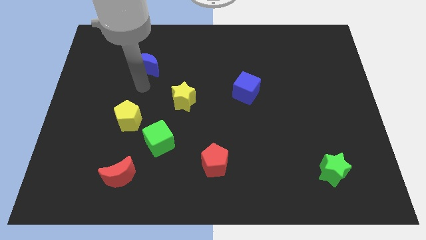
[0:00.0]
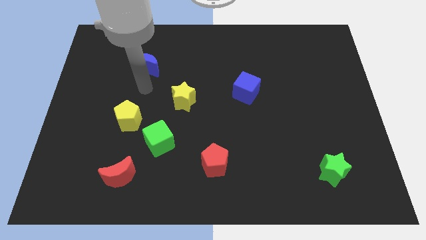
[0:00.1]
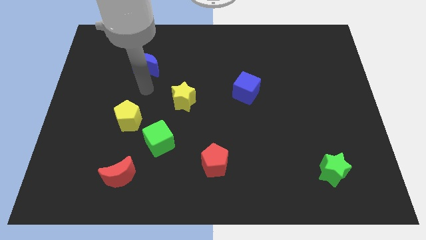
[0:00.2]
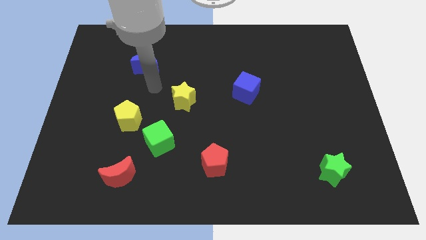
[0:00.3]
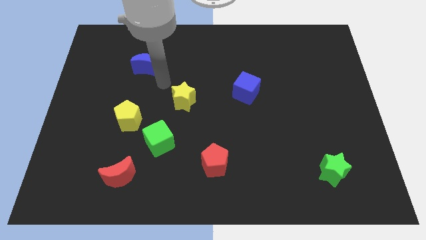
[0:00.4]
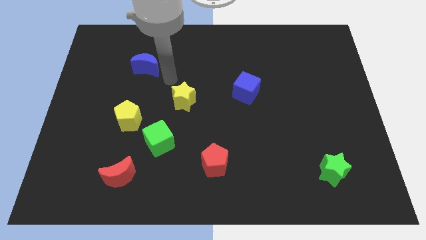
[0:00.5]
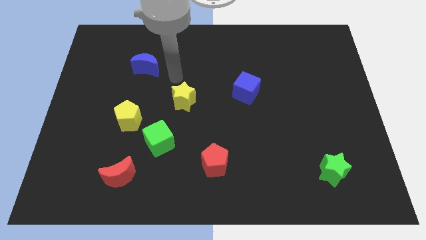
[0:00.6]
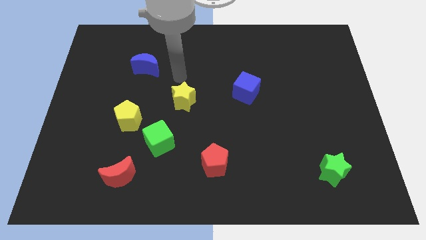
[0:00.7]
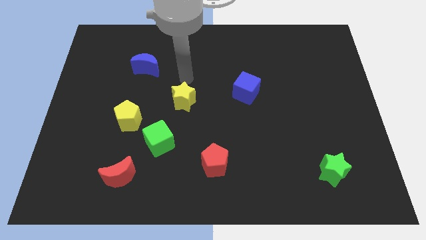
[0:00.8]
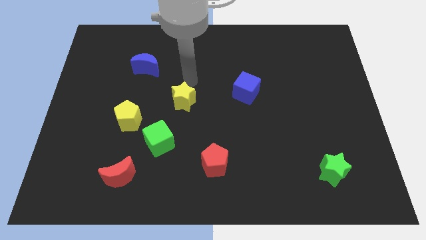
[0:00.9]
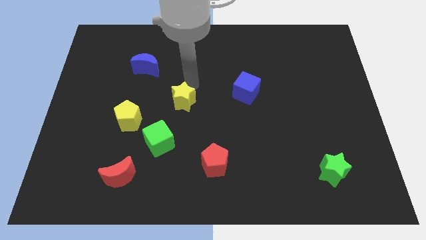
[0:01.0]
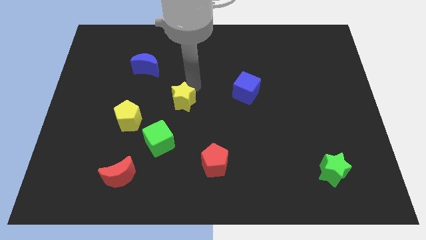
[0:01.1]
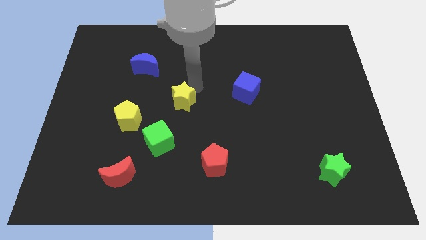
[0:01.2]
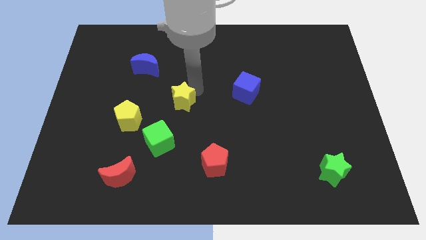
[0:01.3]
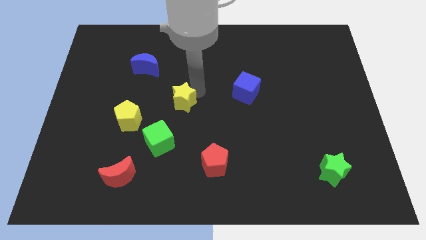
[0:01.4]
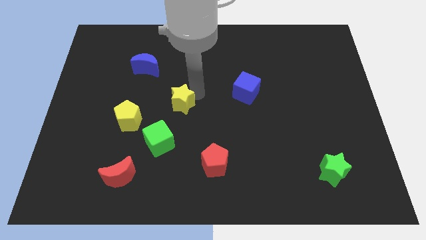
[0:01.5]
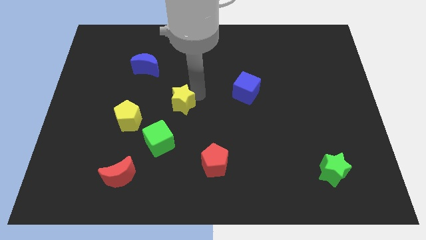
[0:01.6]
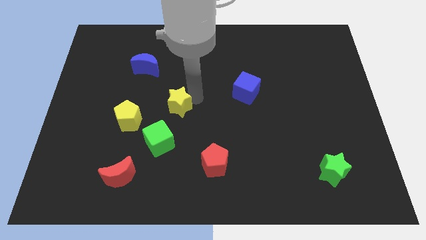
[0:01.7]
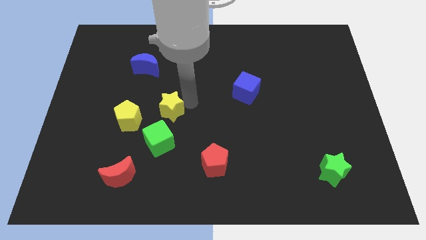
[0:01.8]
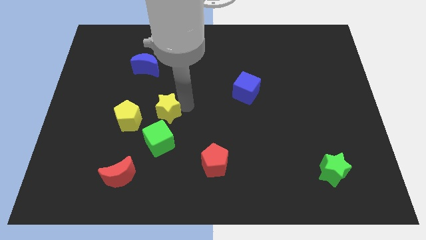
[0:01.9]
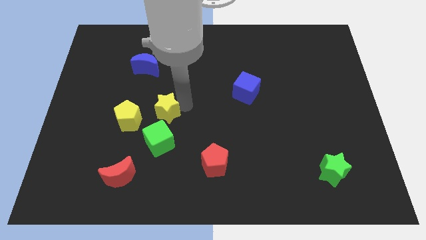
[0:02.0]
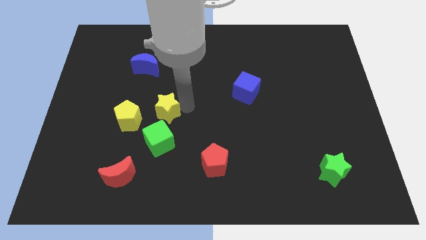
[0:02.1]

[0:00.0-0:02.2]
move the yellow star close to the green cube

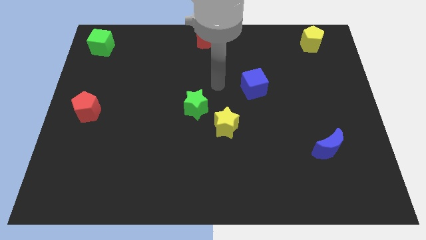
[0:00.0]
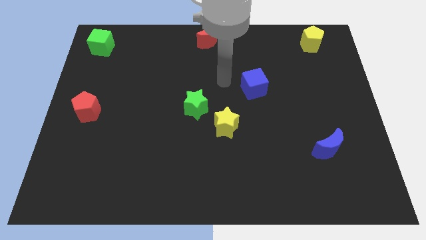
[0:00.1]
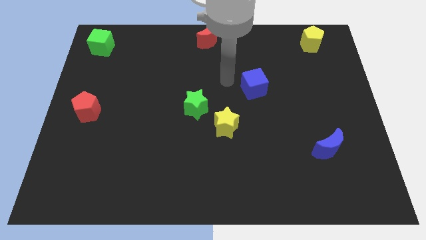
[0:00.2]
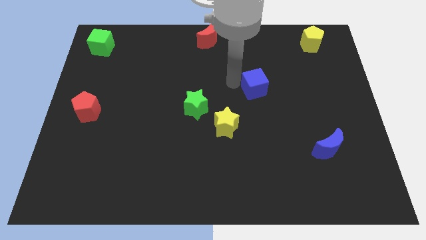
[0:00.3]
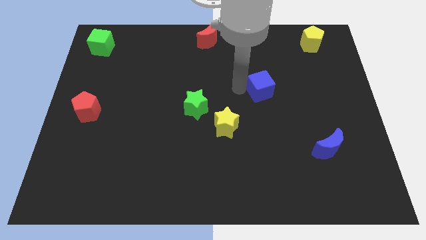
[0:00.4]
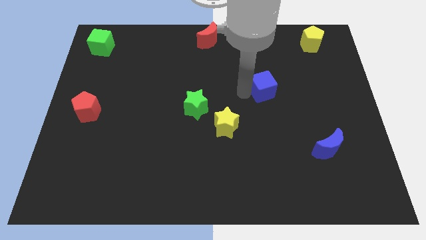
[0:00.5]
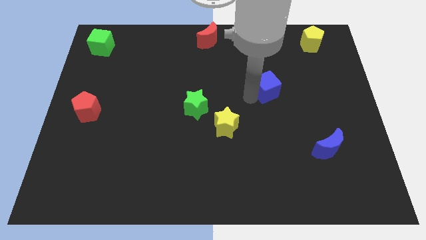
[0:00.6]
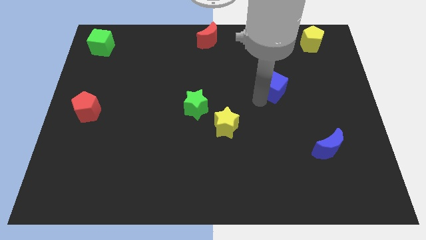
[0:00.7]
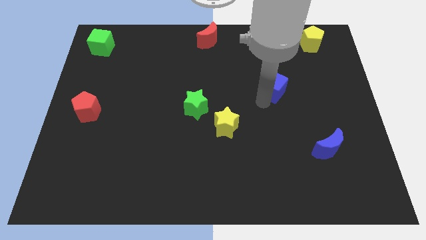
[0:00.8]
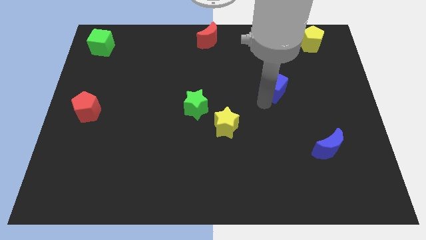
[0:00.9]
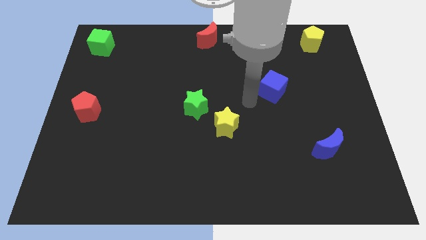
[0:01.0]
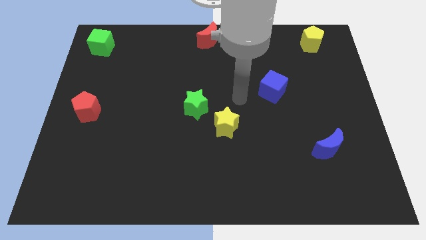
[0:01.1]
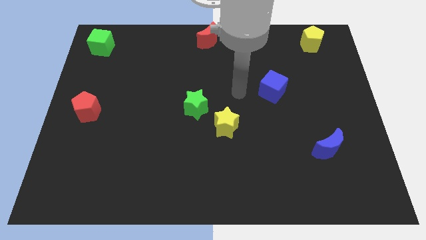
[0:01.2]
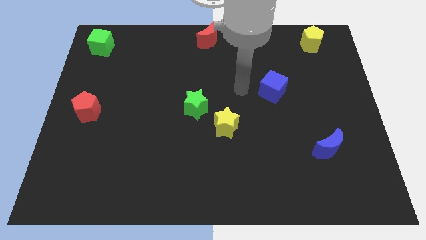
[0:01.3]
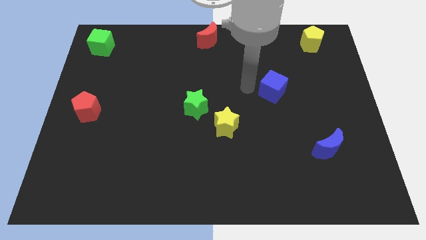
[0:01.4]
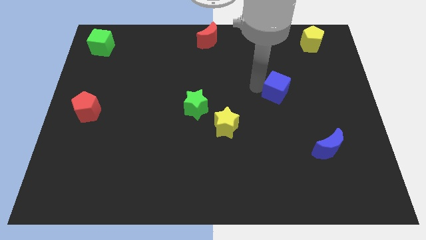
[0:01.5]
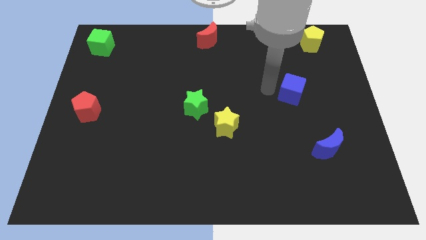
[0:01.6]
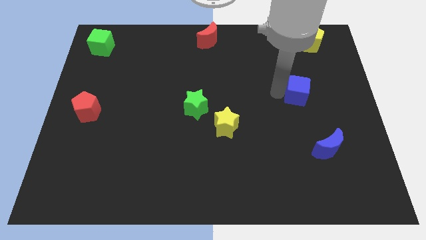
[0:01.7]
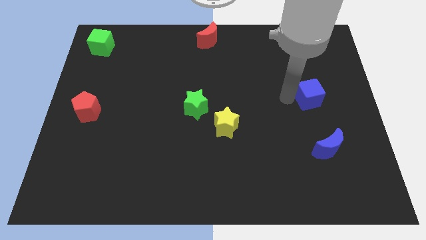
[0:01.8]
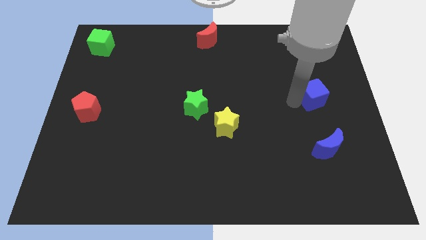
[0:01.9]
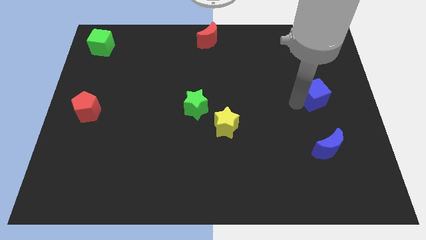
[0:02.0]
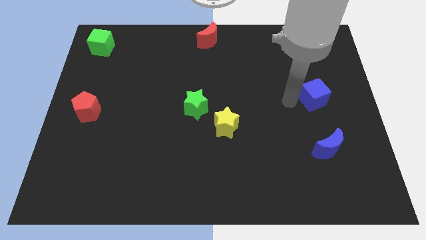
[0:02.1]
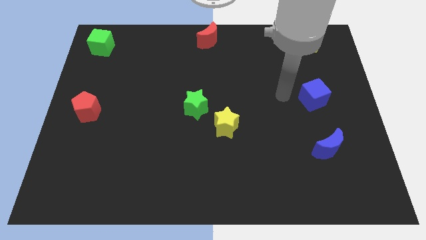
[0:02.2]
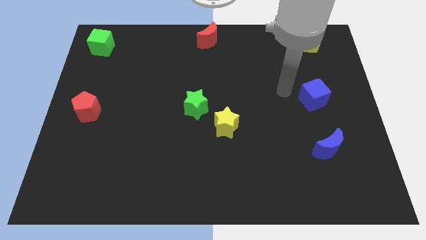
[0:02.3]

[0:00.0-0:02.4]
place the blue cube vertically above the blue moon

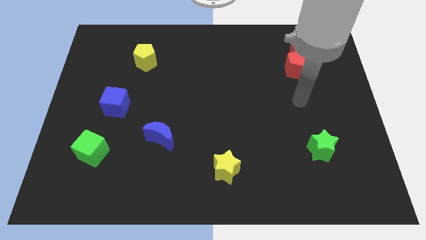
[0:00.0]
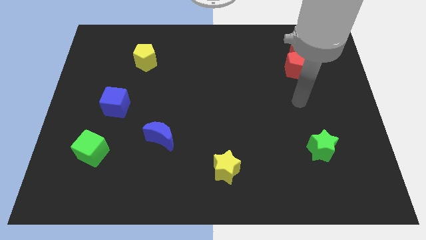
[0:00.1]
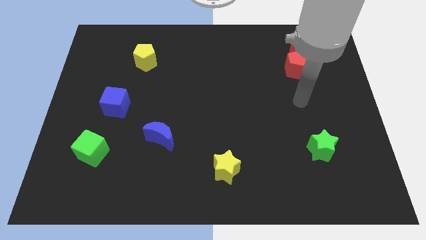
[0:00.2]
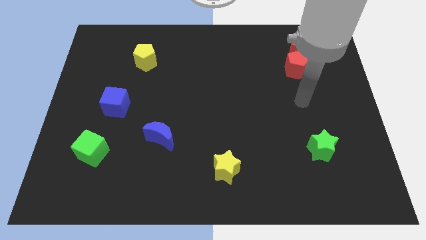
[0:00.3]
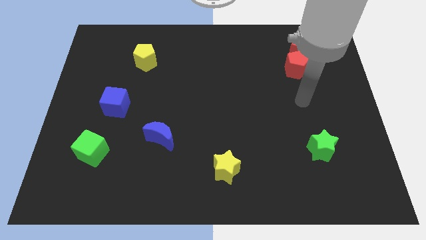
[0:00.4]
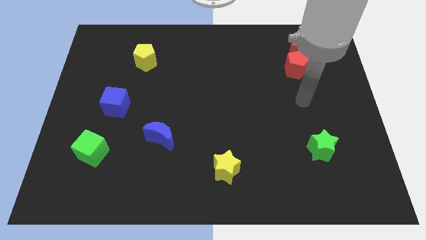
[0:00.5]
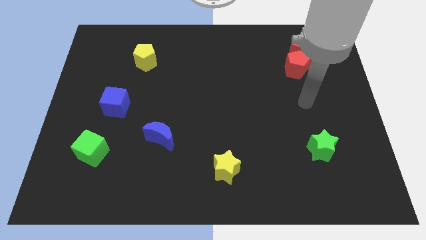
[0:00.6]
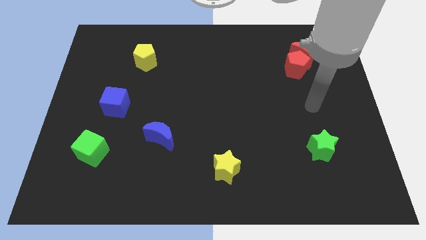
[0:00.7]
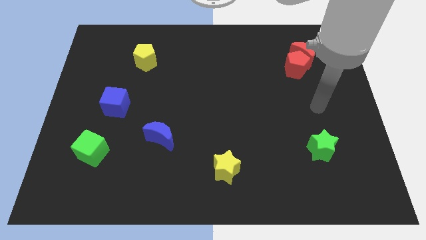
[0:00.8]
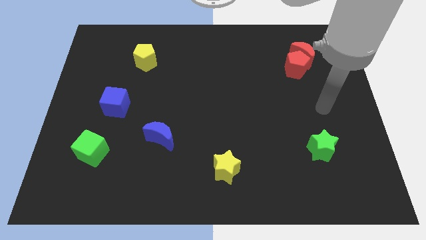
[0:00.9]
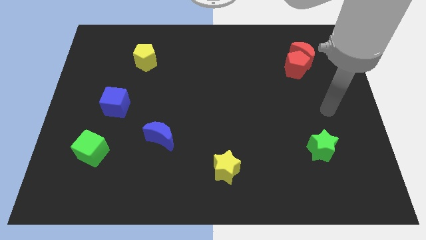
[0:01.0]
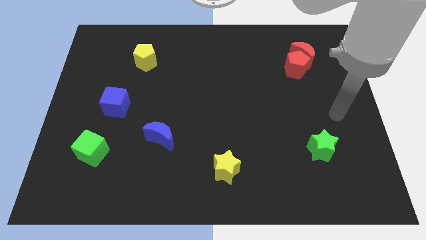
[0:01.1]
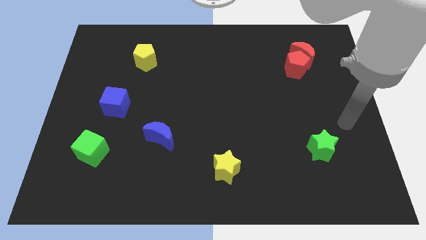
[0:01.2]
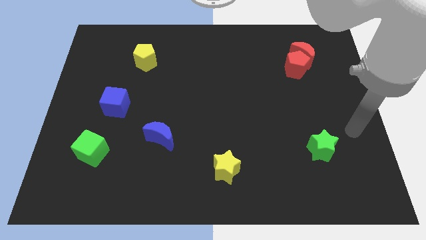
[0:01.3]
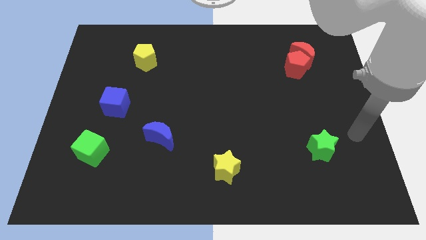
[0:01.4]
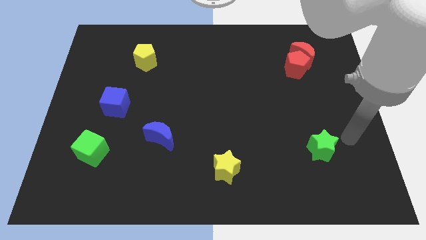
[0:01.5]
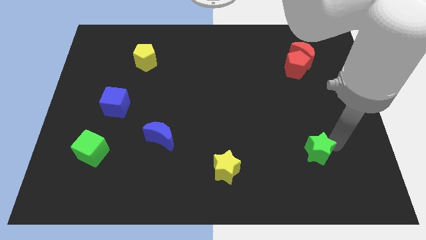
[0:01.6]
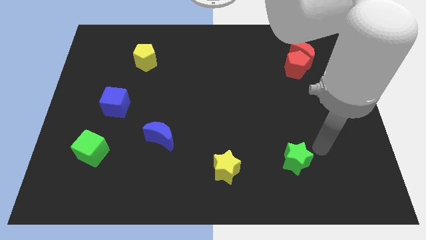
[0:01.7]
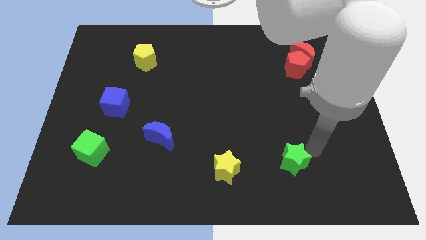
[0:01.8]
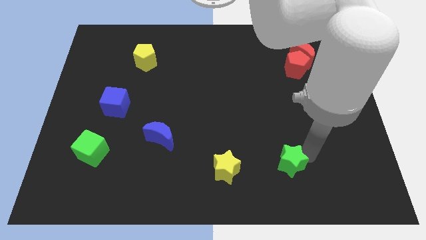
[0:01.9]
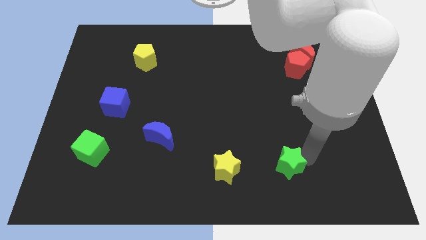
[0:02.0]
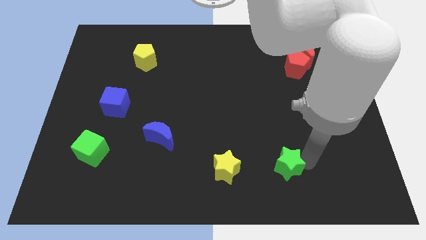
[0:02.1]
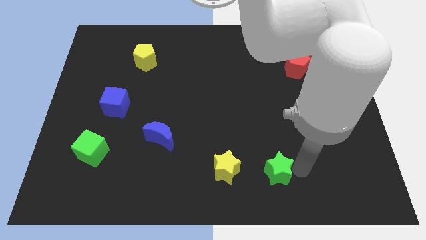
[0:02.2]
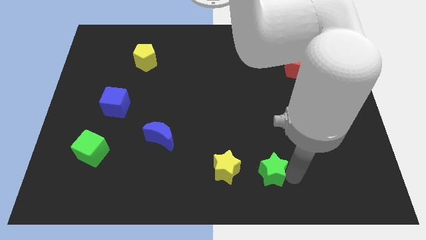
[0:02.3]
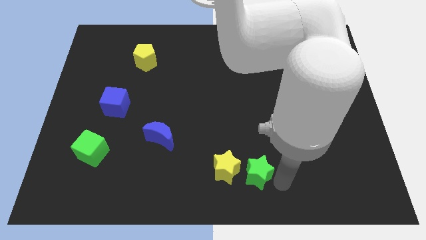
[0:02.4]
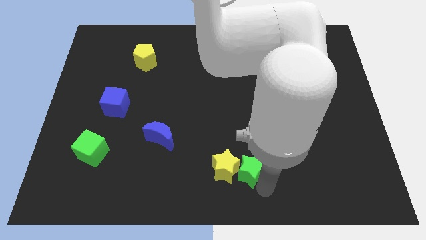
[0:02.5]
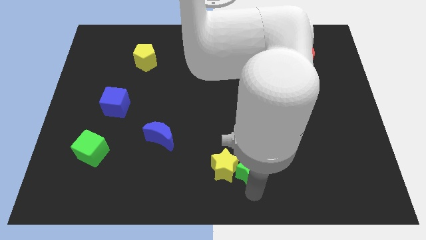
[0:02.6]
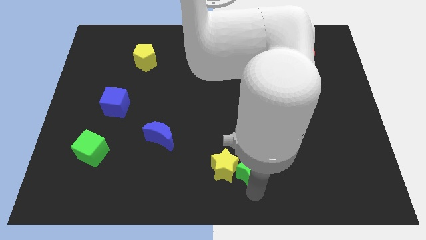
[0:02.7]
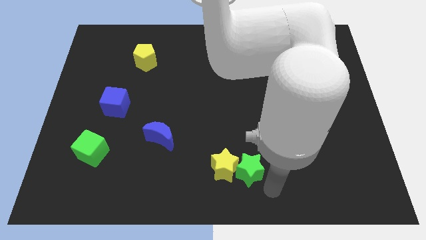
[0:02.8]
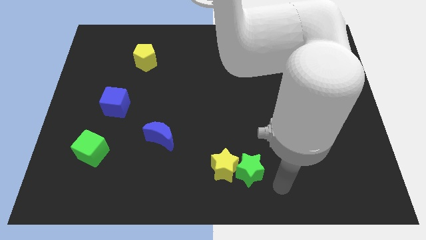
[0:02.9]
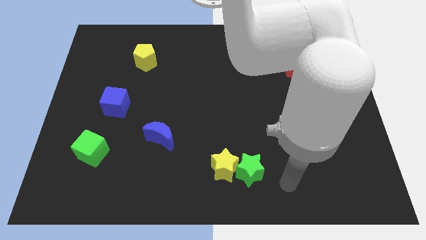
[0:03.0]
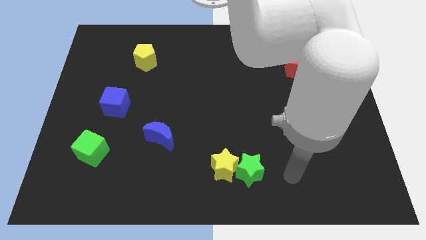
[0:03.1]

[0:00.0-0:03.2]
push green star into yellow star

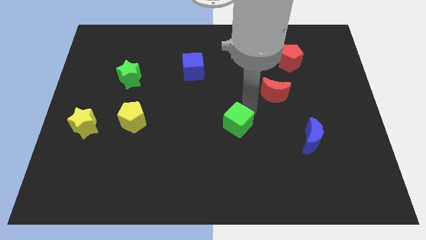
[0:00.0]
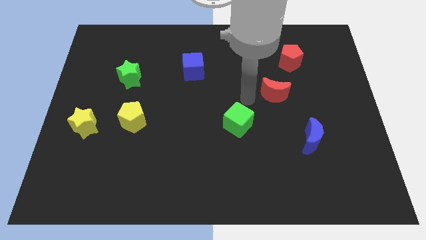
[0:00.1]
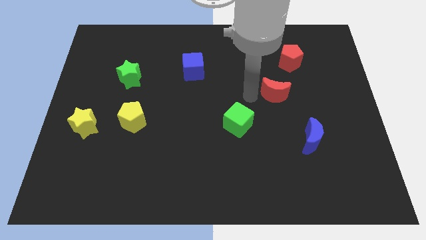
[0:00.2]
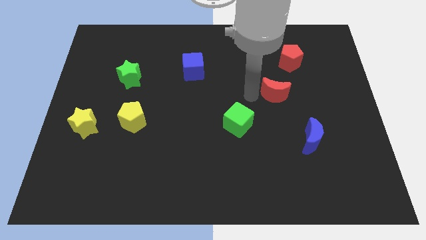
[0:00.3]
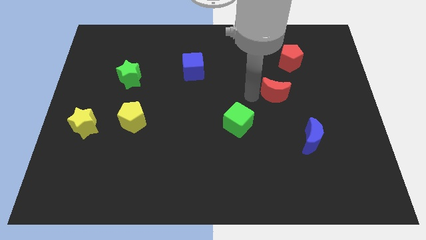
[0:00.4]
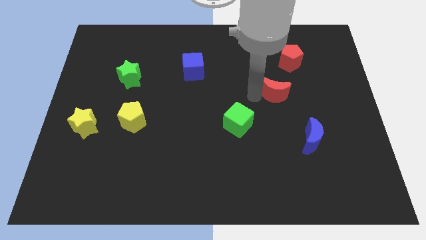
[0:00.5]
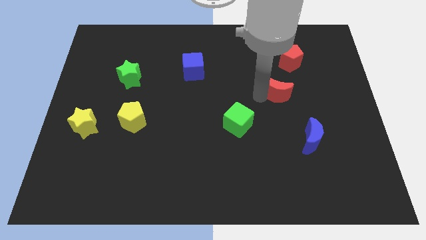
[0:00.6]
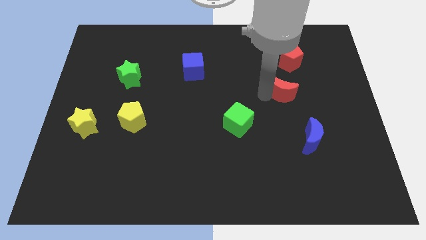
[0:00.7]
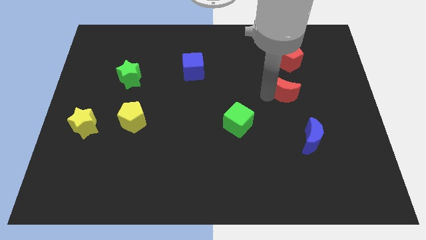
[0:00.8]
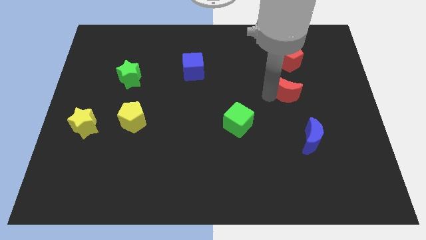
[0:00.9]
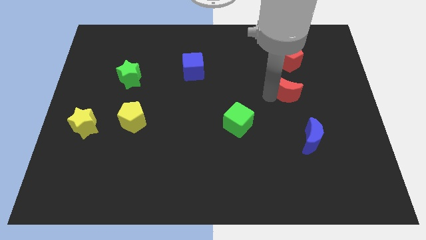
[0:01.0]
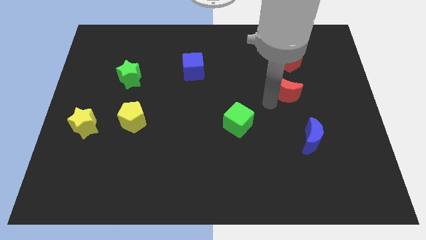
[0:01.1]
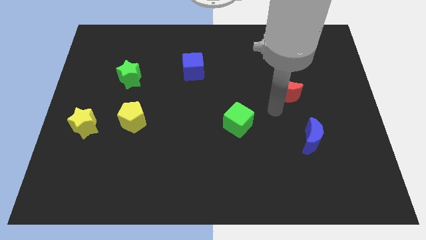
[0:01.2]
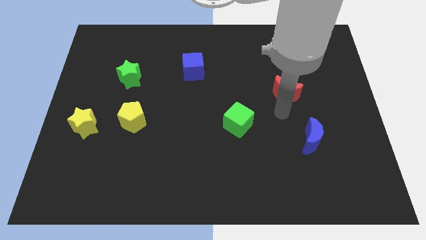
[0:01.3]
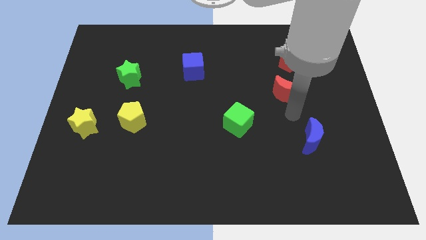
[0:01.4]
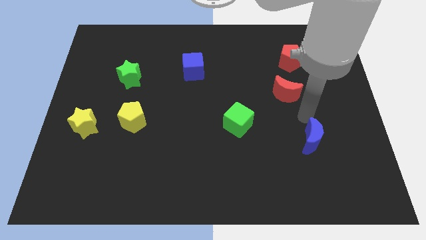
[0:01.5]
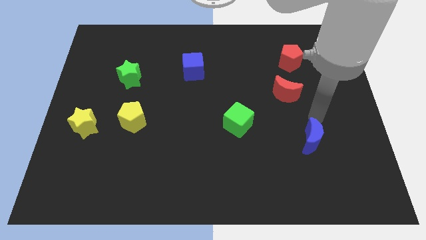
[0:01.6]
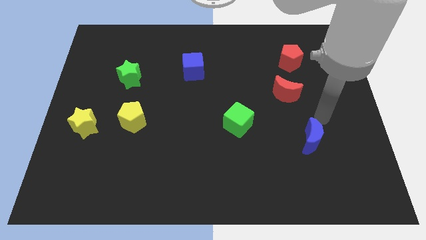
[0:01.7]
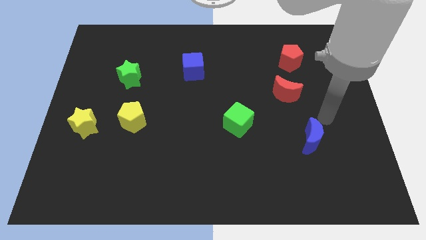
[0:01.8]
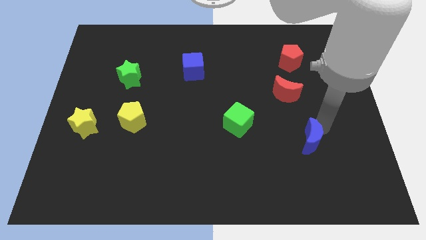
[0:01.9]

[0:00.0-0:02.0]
place the red moon below the red pentagon
